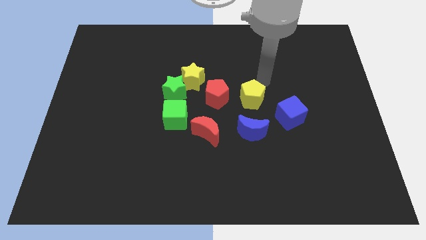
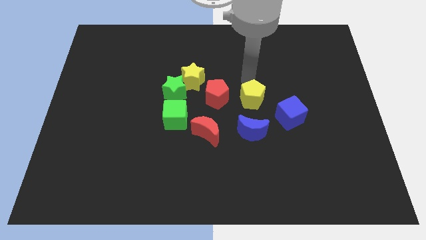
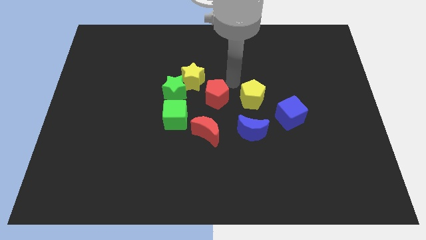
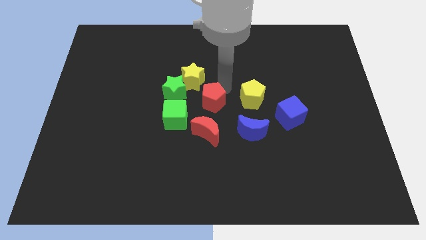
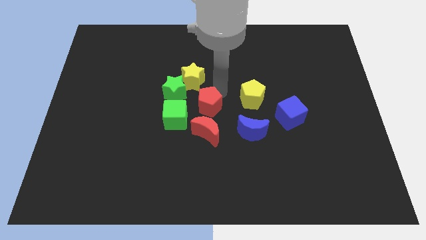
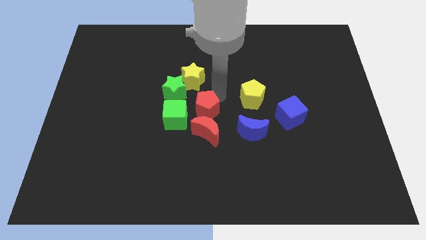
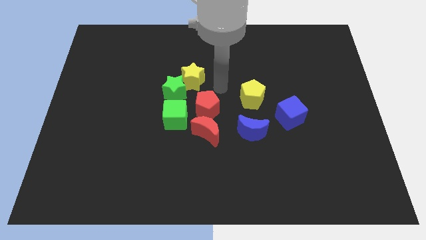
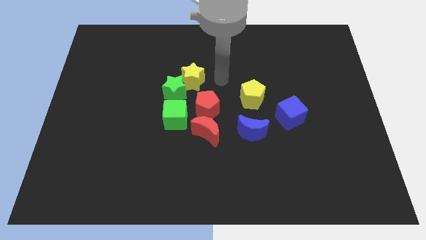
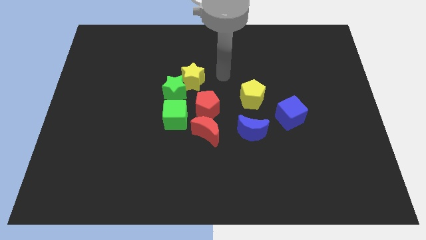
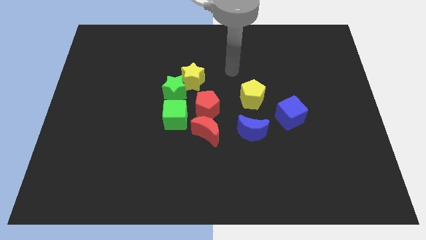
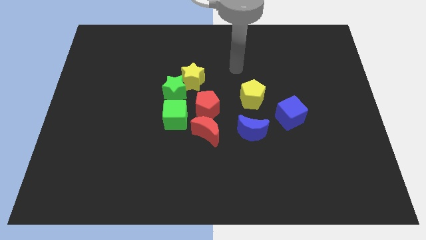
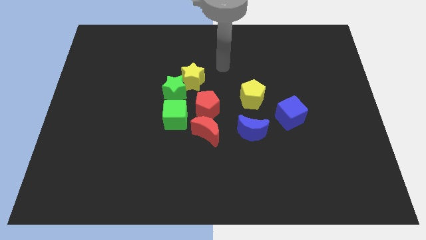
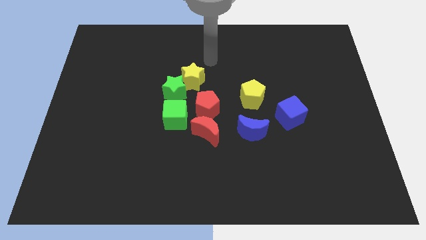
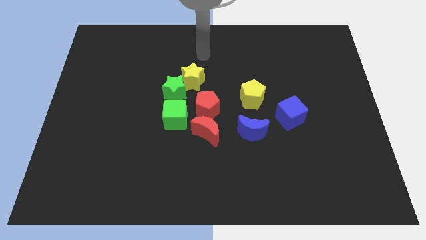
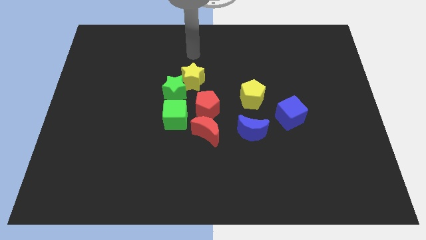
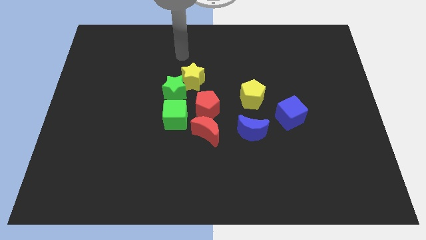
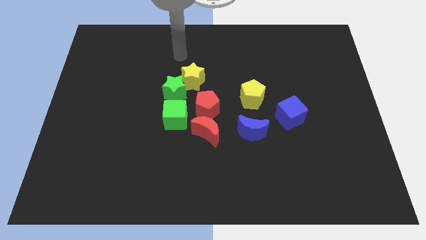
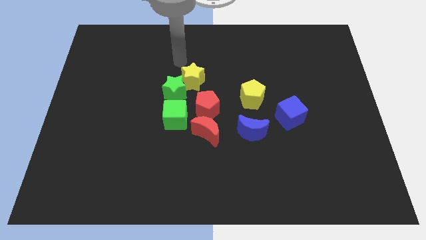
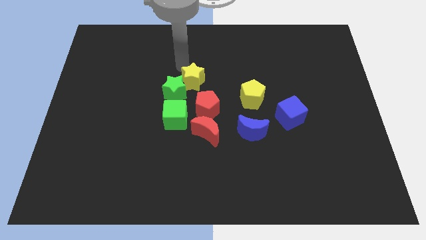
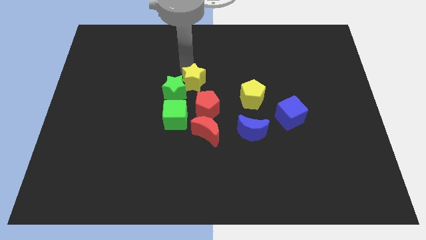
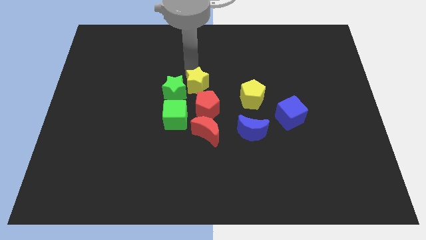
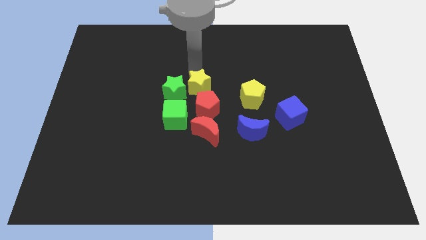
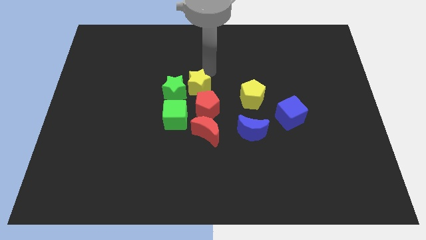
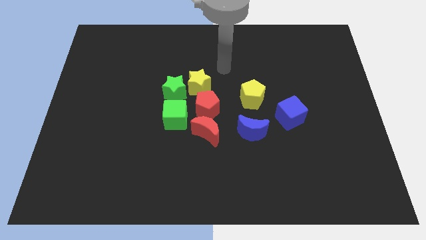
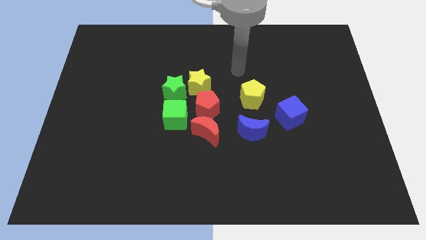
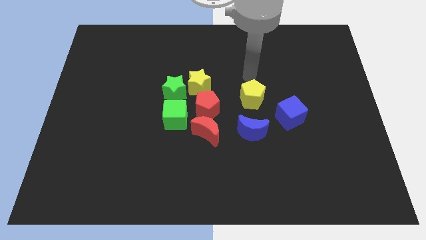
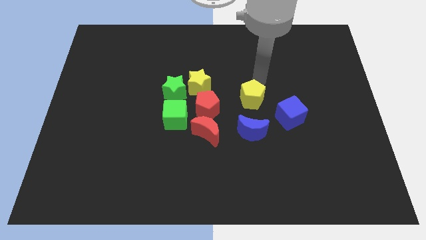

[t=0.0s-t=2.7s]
push a group of blocks to the center

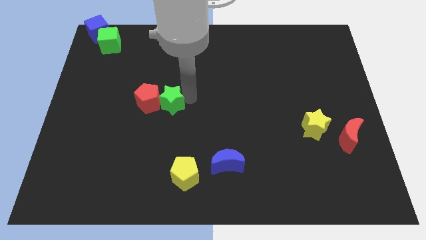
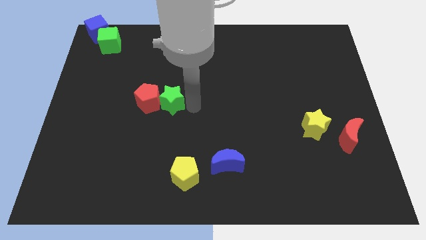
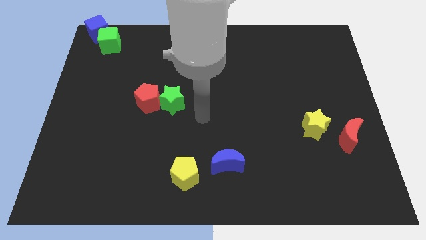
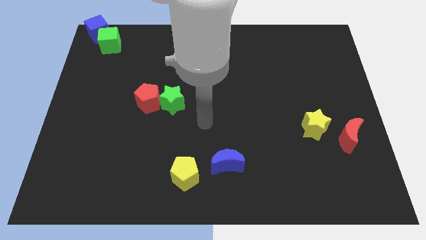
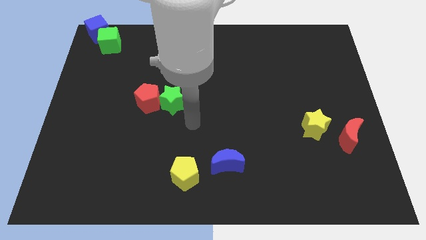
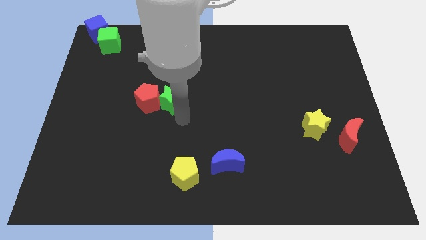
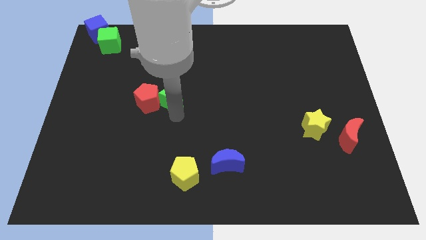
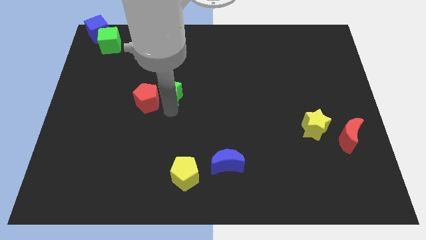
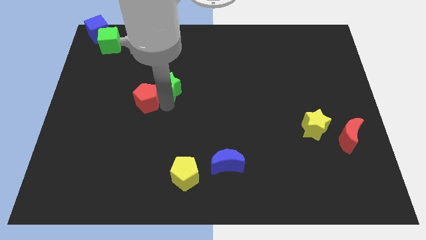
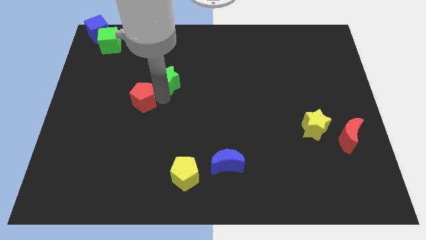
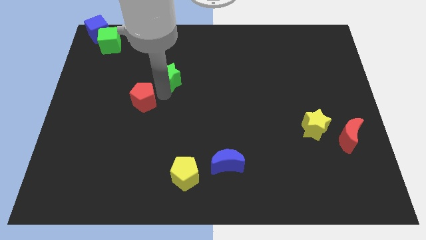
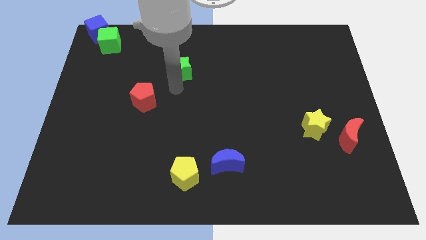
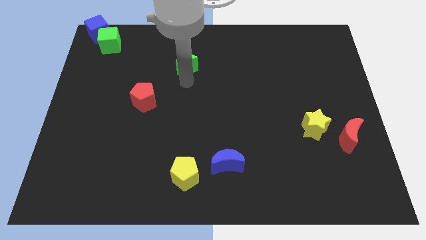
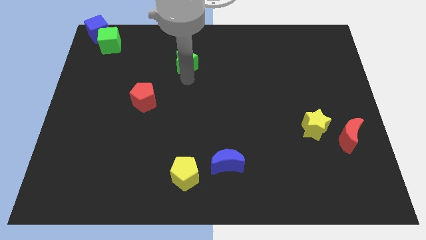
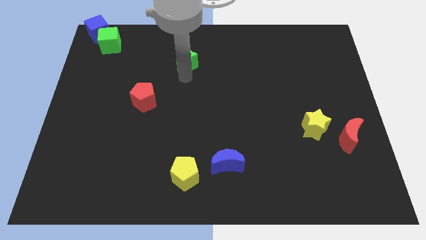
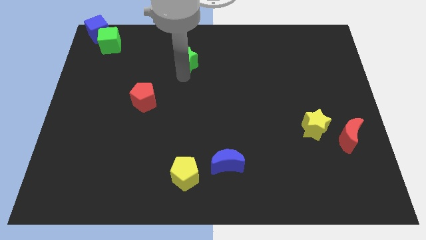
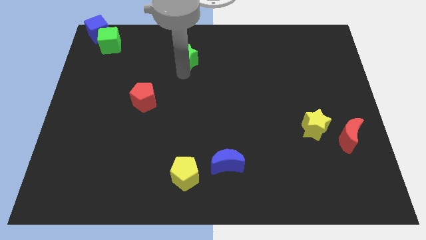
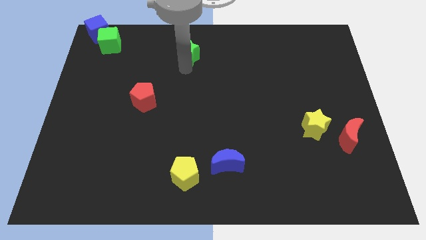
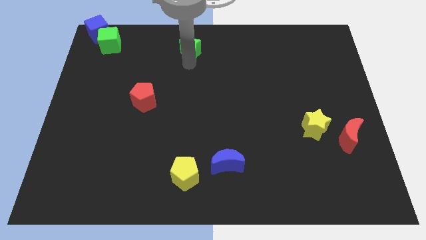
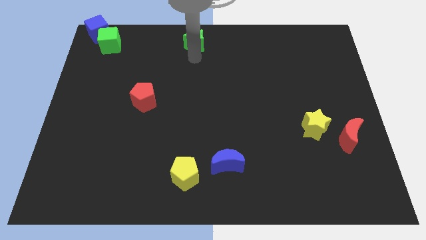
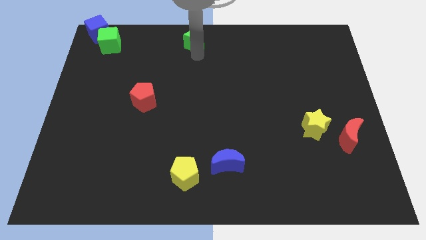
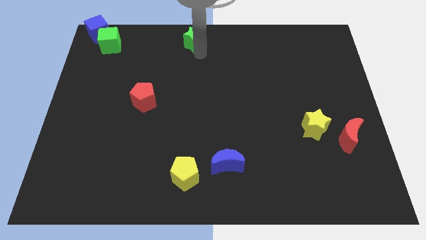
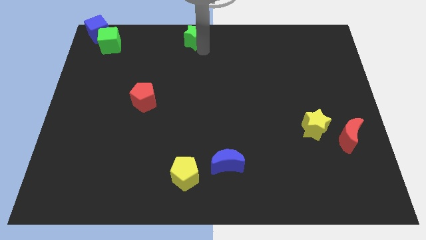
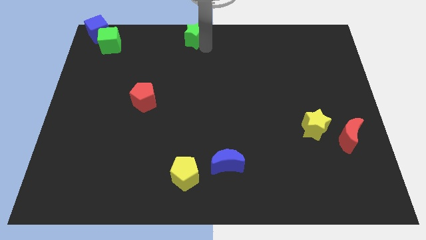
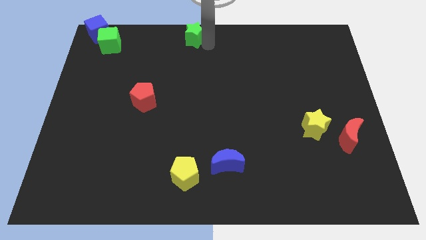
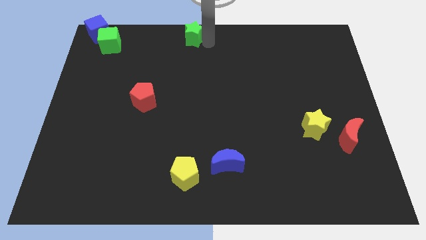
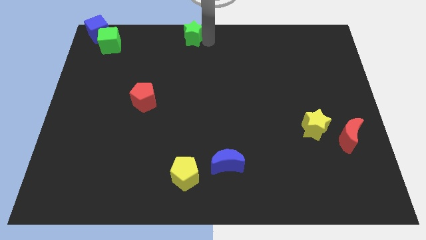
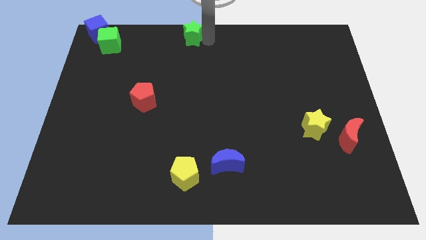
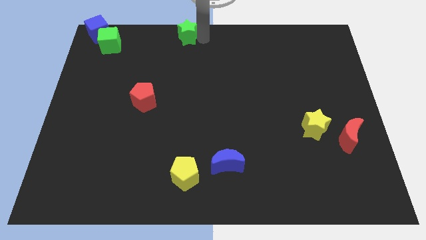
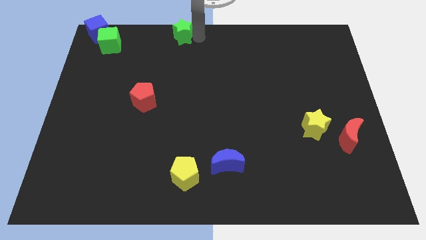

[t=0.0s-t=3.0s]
separate the green star at the top above yellow pentagon

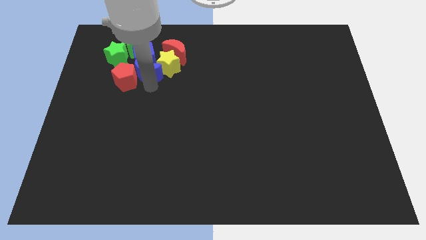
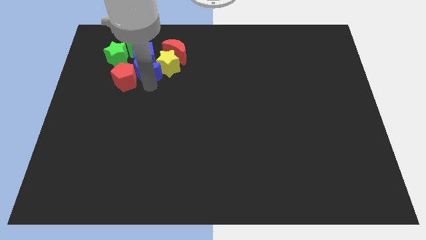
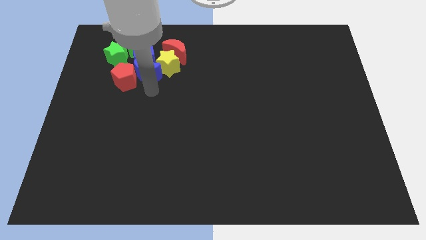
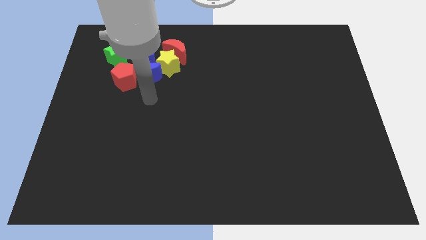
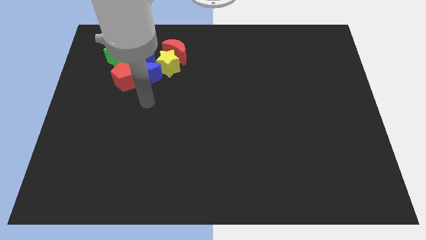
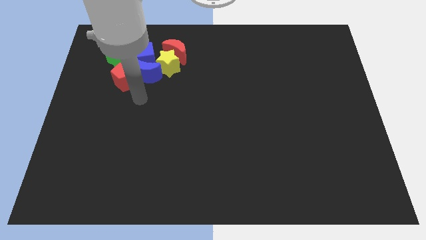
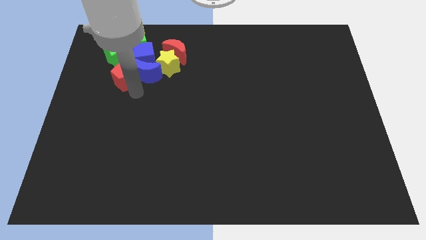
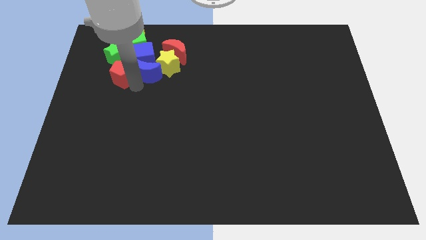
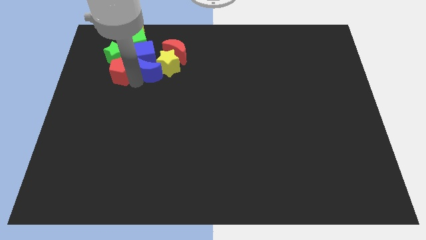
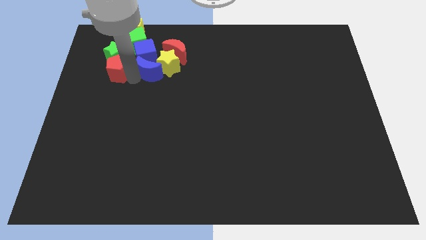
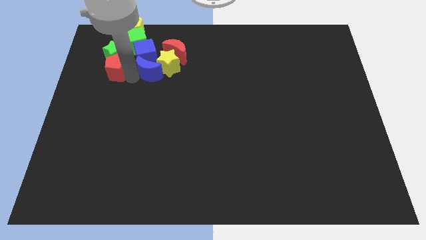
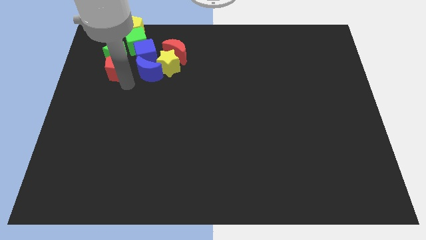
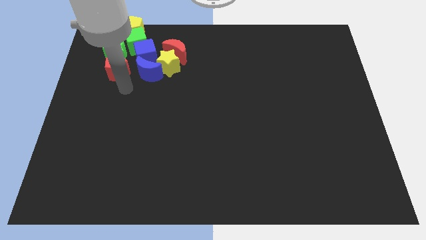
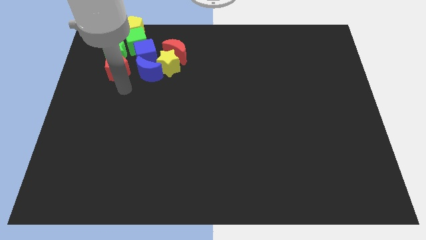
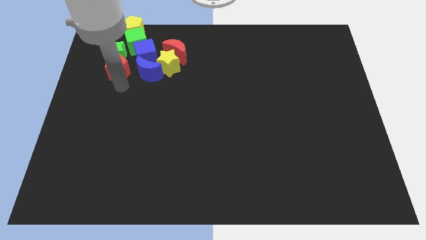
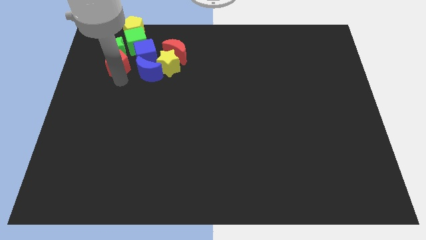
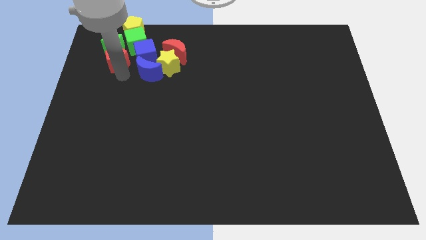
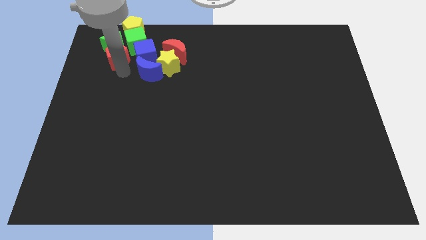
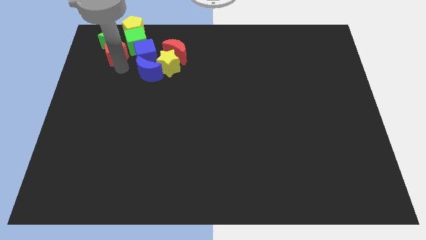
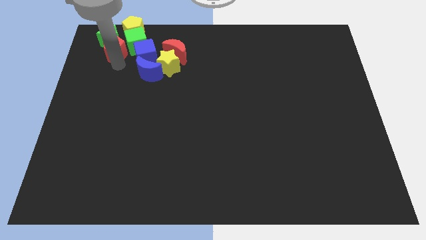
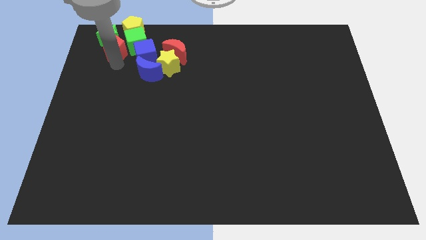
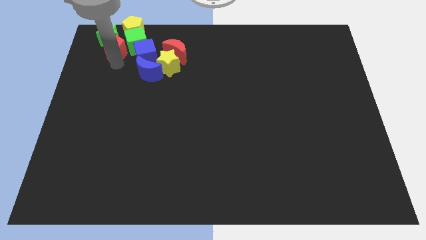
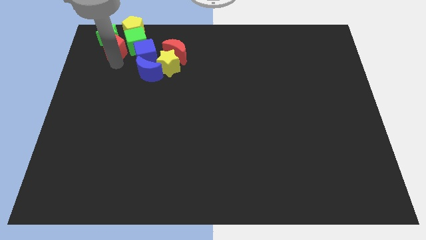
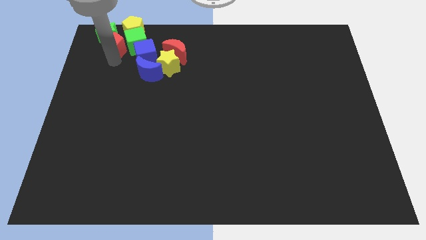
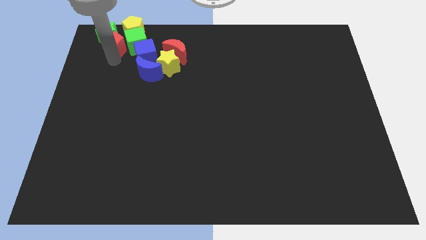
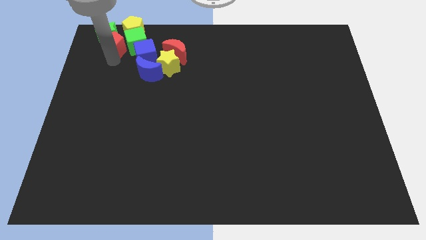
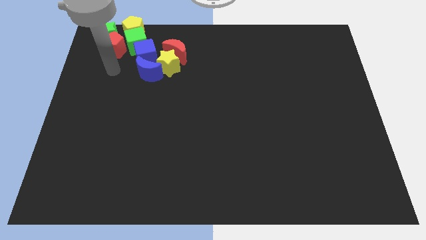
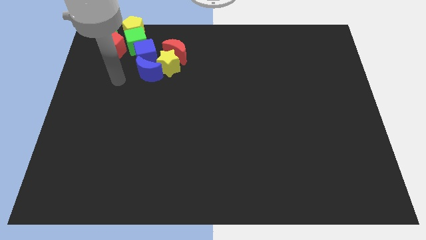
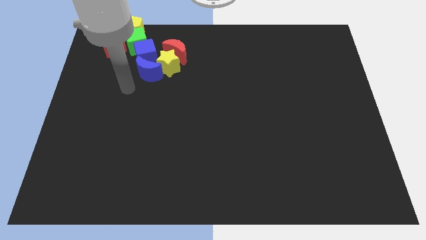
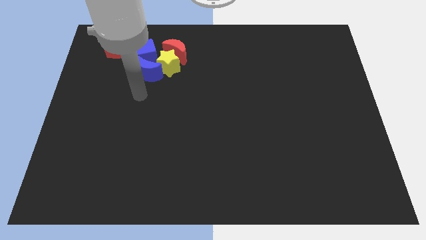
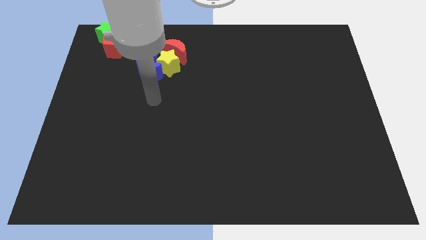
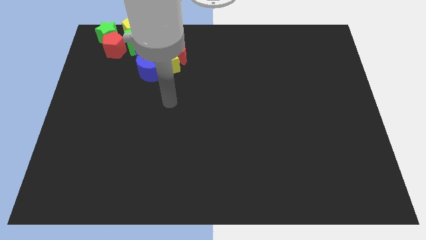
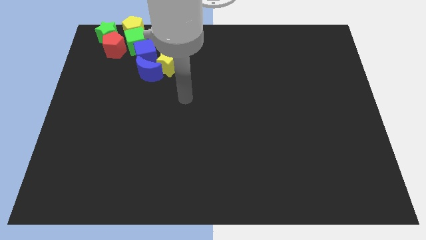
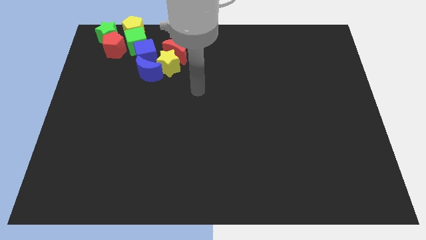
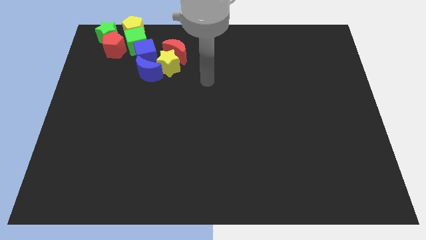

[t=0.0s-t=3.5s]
place the green star and red pentagon at the left side of the green cube and yellow pentagon

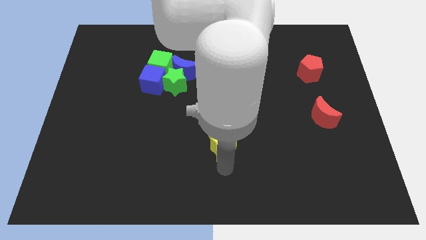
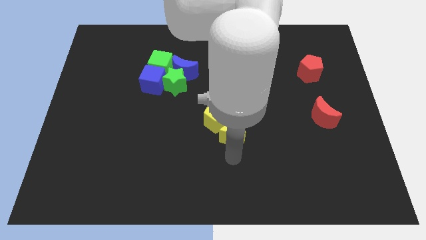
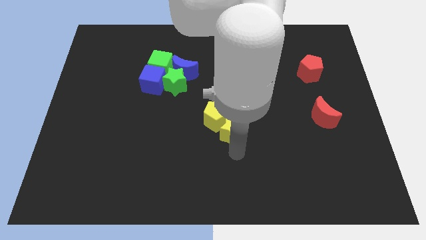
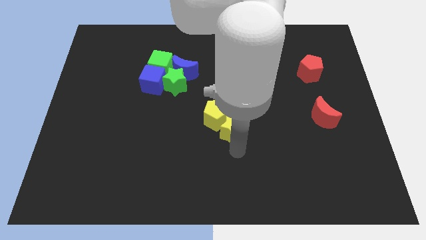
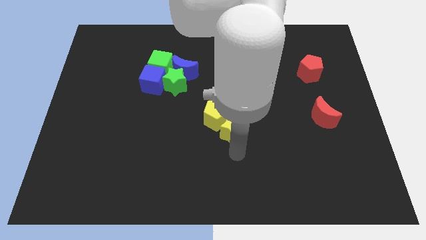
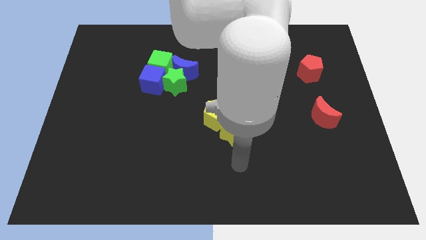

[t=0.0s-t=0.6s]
push yellow blocks towards the center
